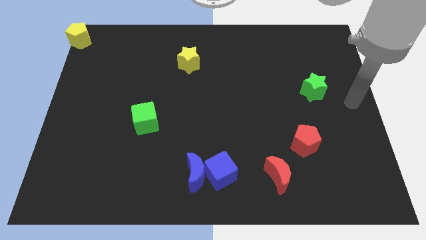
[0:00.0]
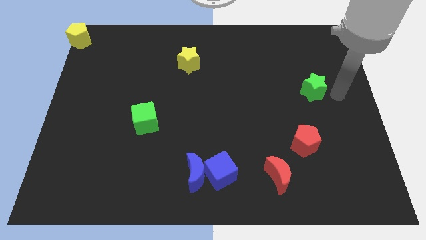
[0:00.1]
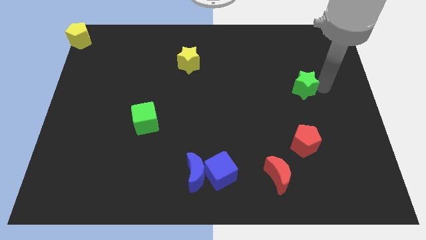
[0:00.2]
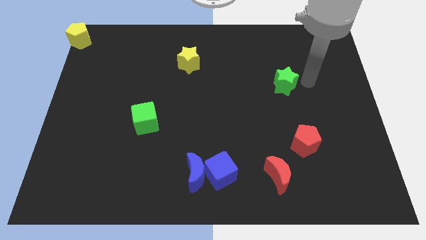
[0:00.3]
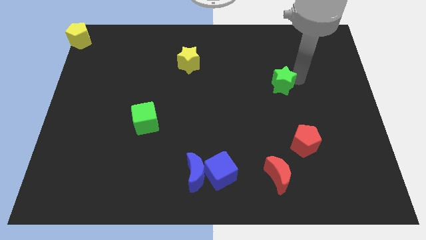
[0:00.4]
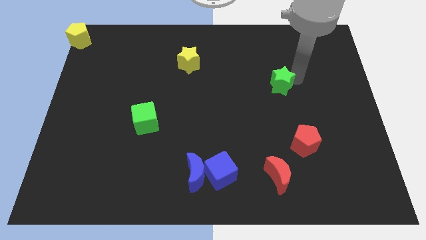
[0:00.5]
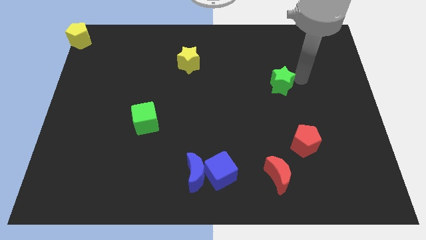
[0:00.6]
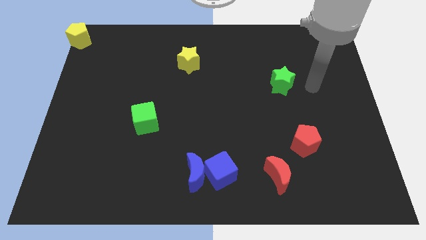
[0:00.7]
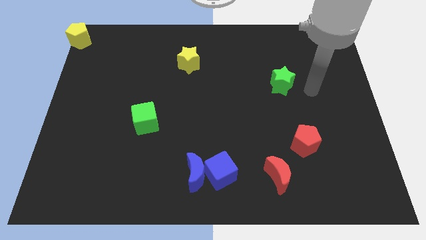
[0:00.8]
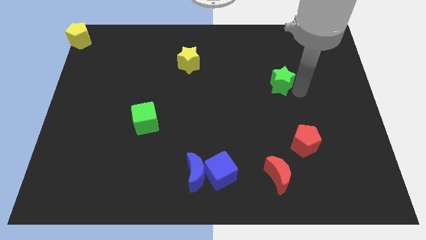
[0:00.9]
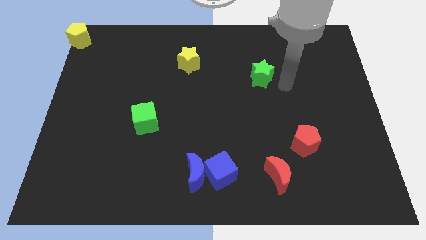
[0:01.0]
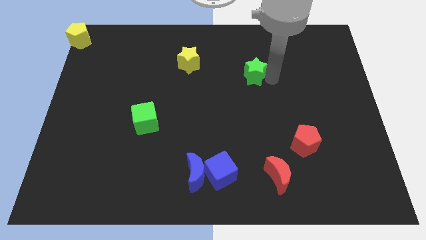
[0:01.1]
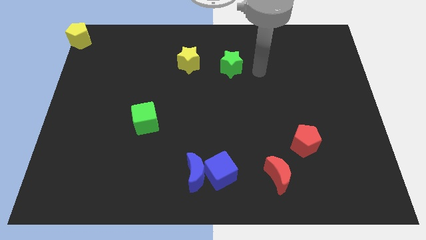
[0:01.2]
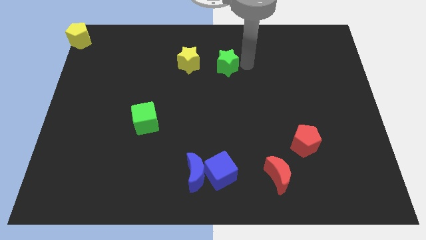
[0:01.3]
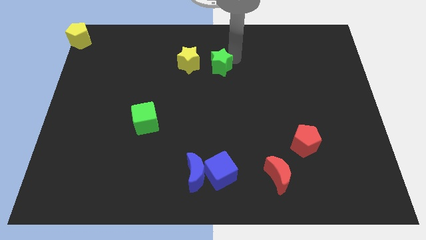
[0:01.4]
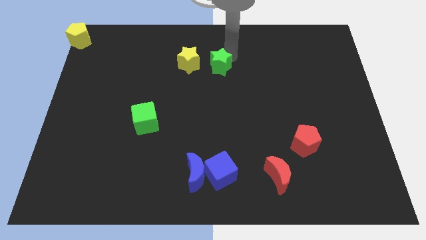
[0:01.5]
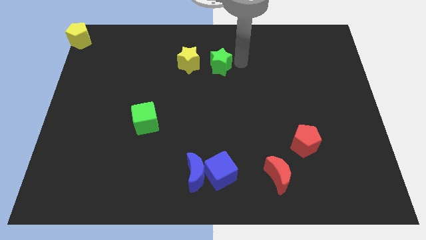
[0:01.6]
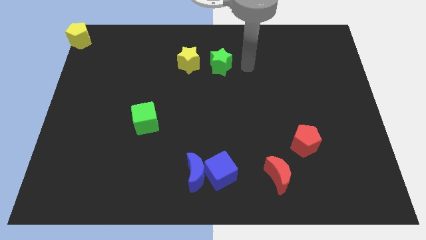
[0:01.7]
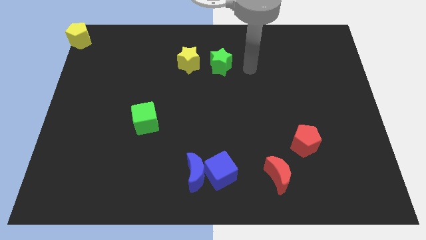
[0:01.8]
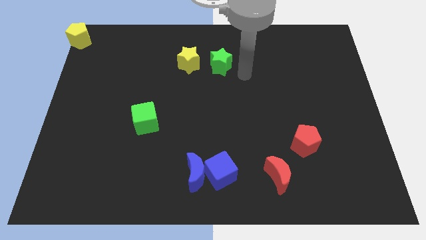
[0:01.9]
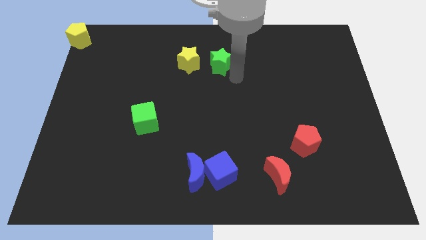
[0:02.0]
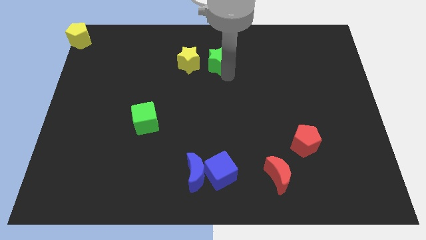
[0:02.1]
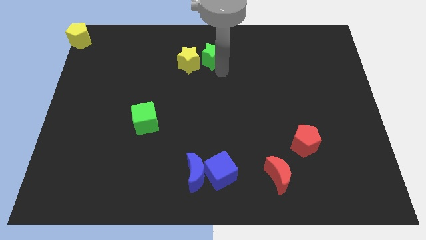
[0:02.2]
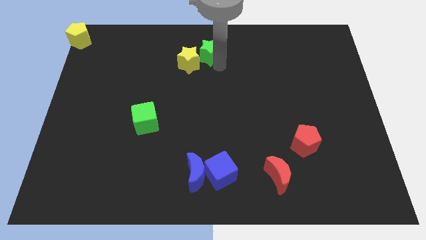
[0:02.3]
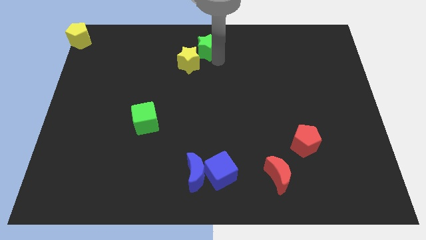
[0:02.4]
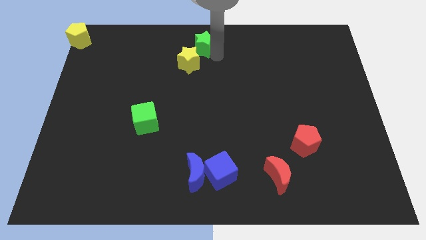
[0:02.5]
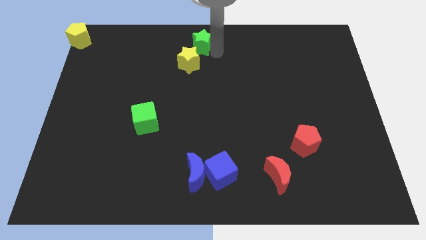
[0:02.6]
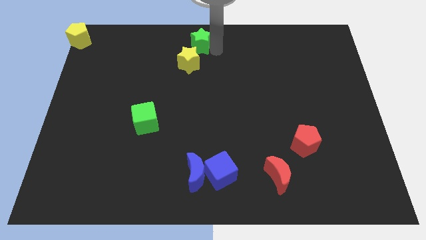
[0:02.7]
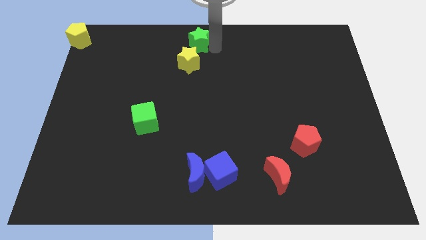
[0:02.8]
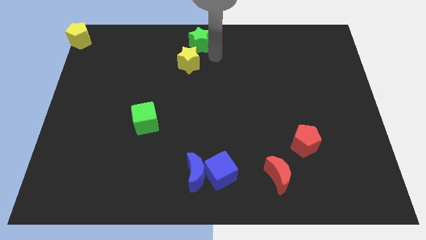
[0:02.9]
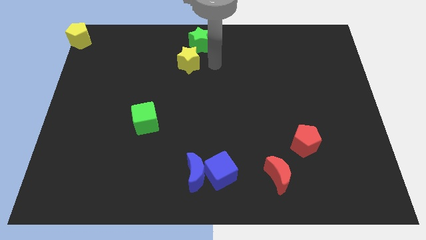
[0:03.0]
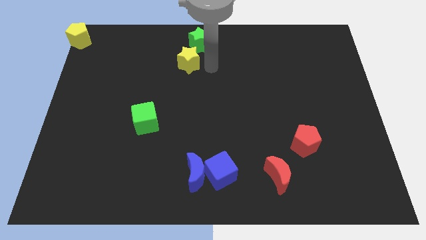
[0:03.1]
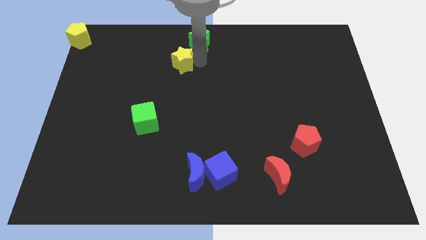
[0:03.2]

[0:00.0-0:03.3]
move the green star above the yellow star

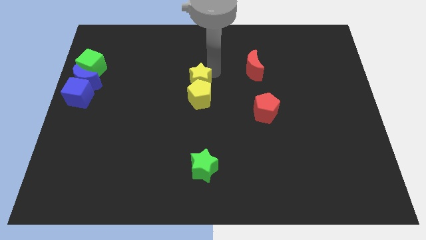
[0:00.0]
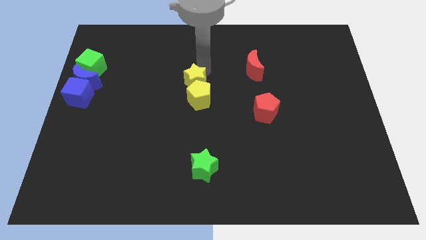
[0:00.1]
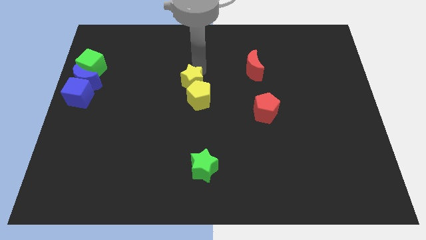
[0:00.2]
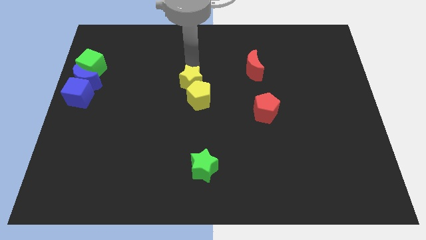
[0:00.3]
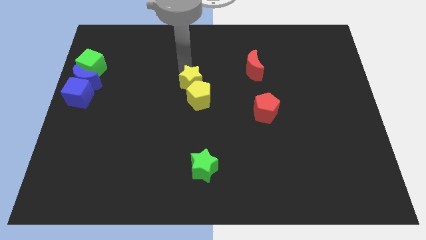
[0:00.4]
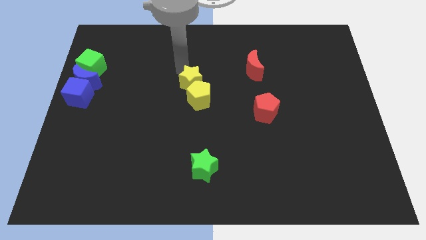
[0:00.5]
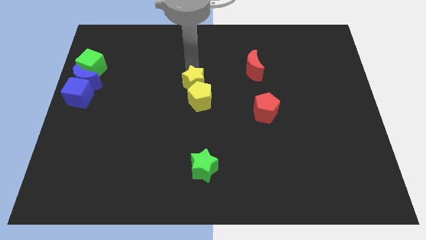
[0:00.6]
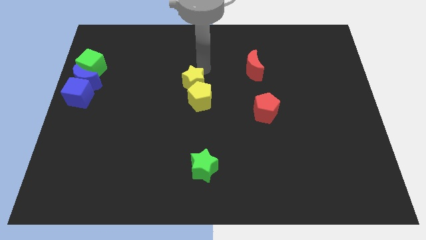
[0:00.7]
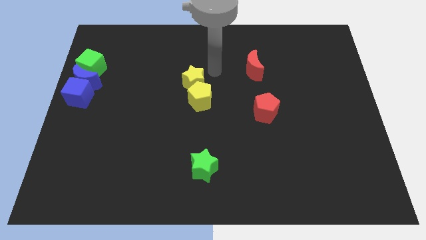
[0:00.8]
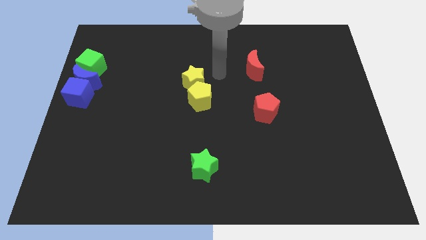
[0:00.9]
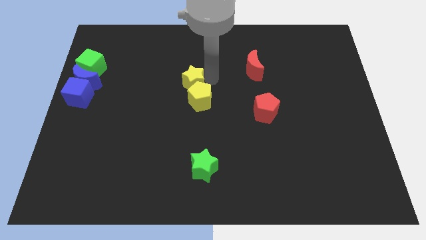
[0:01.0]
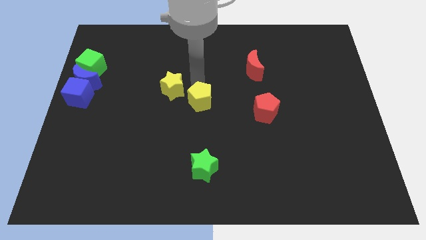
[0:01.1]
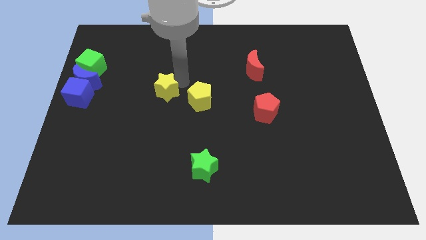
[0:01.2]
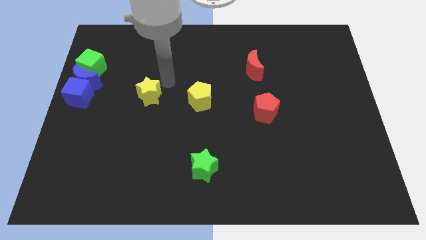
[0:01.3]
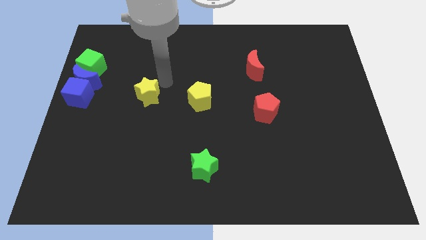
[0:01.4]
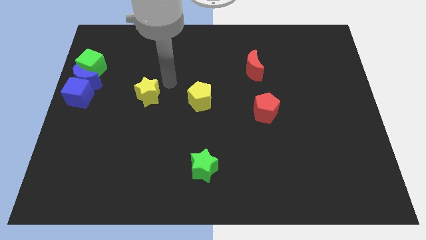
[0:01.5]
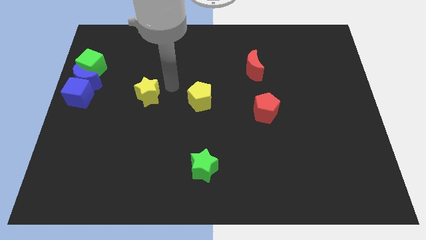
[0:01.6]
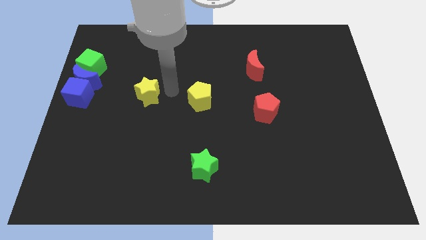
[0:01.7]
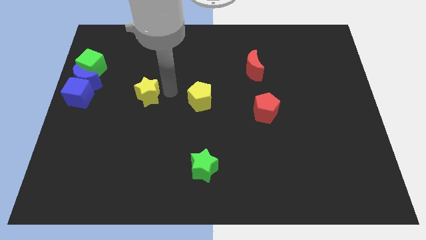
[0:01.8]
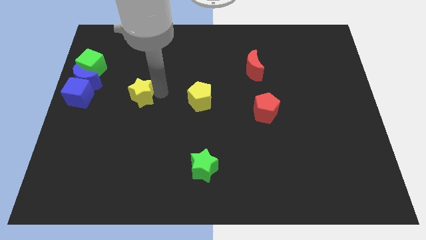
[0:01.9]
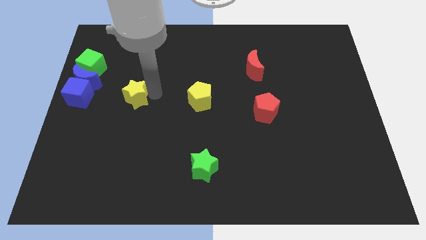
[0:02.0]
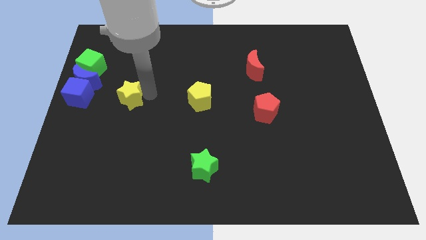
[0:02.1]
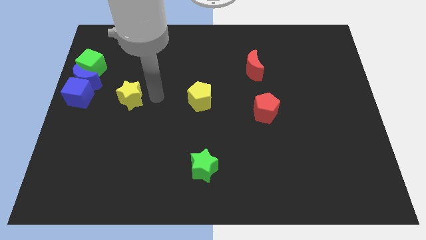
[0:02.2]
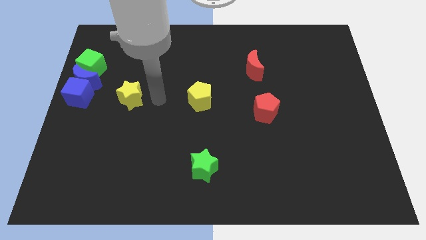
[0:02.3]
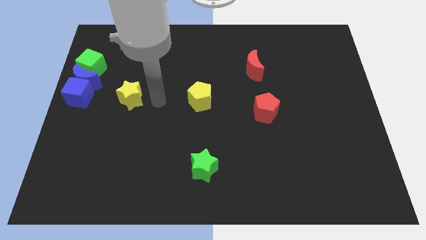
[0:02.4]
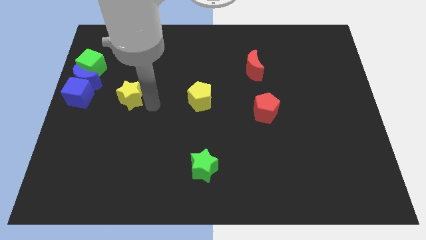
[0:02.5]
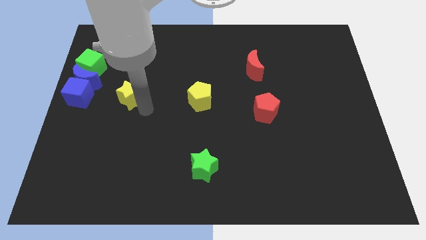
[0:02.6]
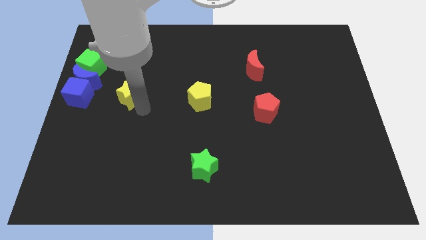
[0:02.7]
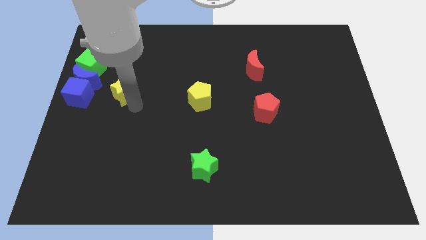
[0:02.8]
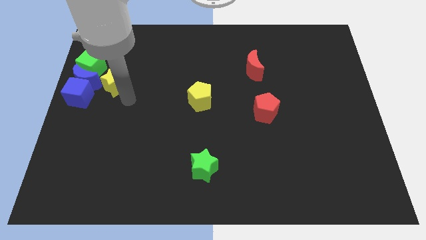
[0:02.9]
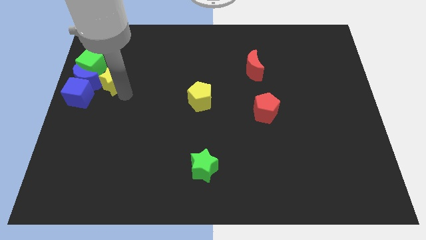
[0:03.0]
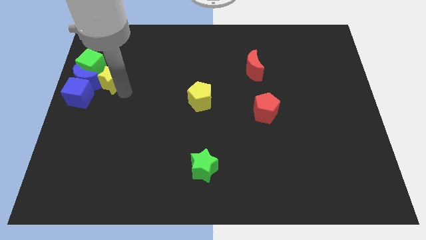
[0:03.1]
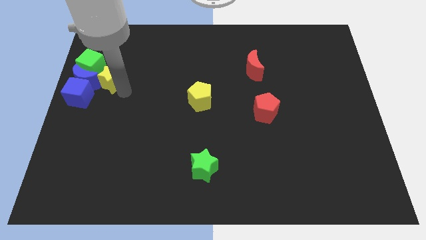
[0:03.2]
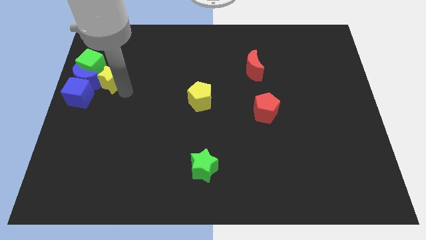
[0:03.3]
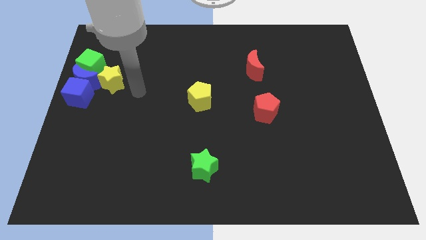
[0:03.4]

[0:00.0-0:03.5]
place the yellow star right to the blue moon

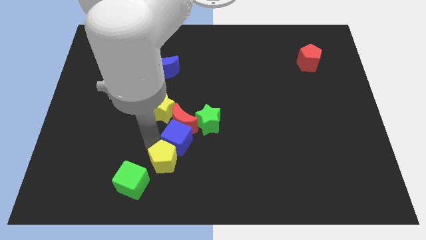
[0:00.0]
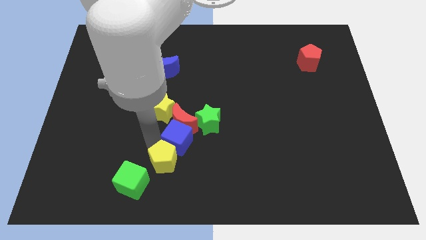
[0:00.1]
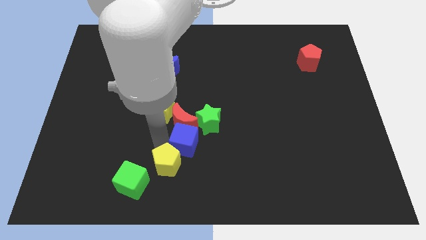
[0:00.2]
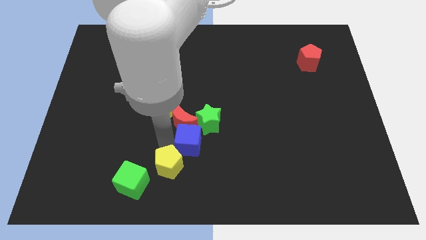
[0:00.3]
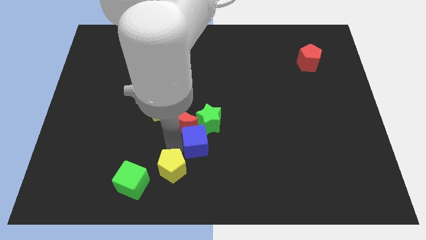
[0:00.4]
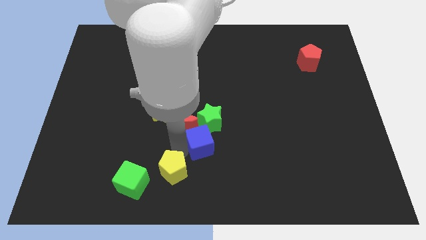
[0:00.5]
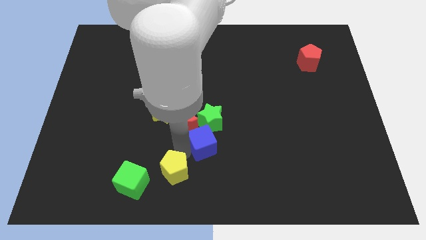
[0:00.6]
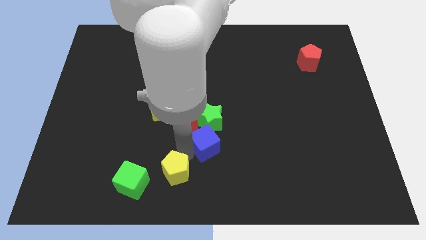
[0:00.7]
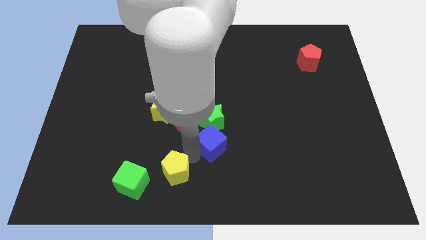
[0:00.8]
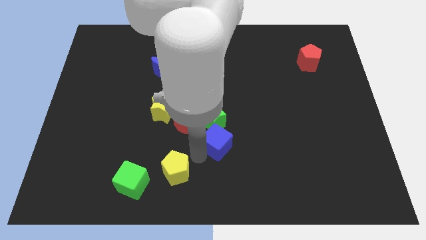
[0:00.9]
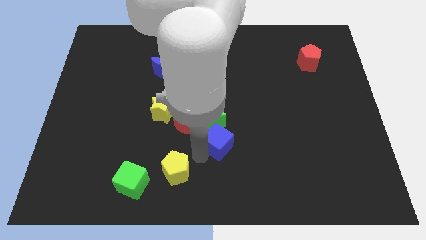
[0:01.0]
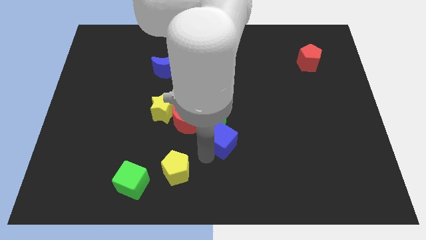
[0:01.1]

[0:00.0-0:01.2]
separate blue cube from the yellow pentagon

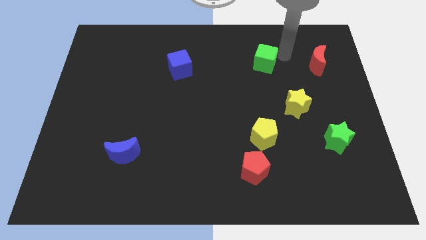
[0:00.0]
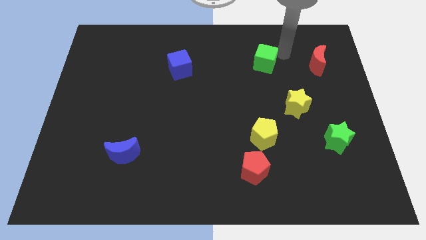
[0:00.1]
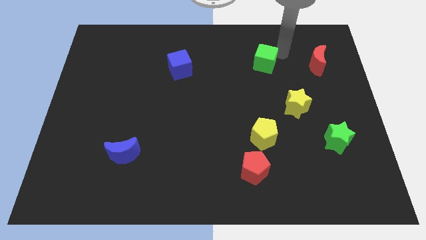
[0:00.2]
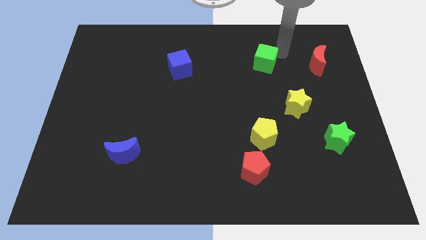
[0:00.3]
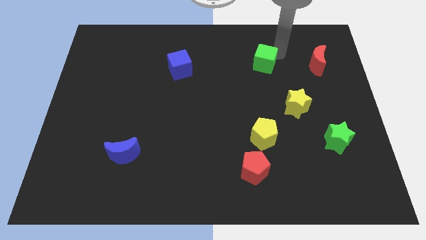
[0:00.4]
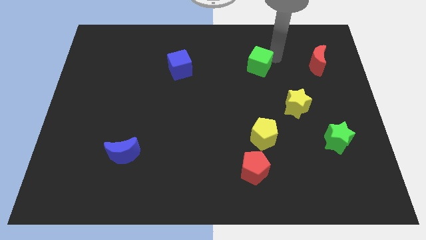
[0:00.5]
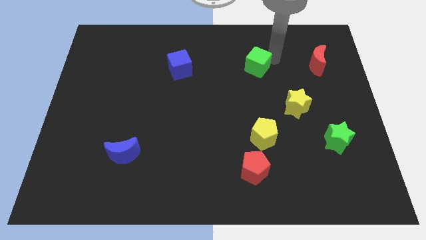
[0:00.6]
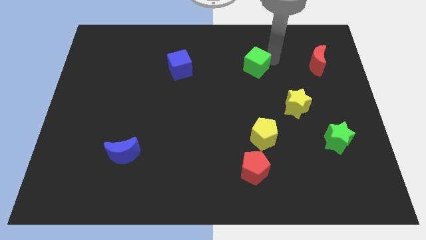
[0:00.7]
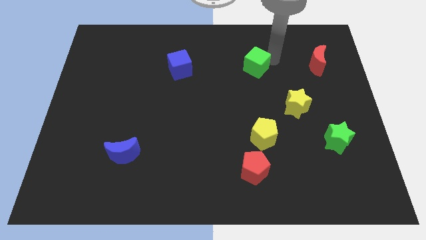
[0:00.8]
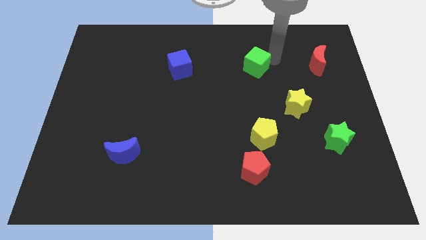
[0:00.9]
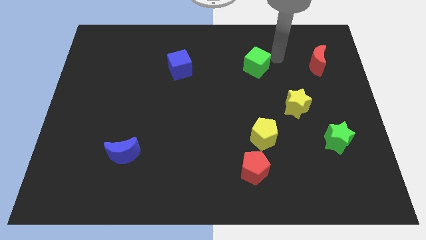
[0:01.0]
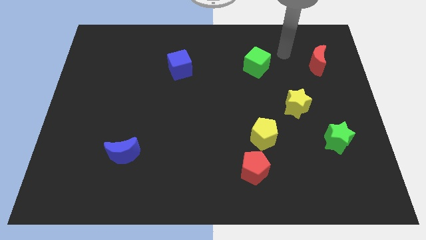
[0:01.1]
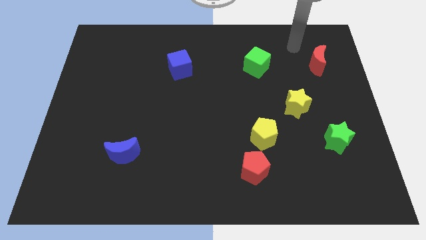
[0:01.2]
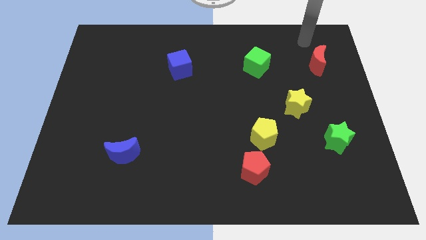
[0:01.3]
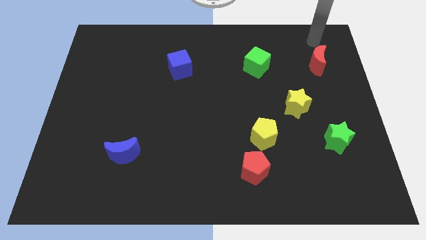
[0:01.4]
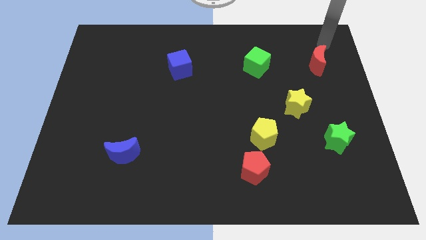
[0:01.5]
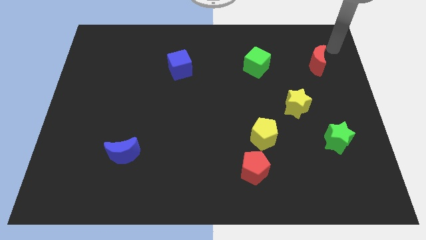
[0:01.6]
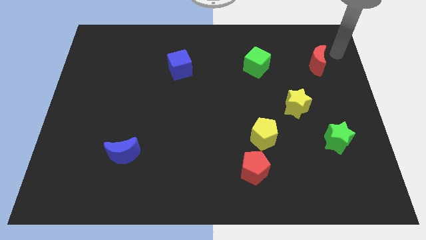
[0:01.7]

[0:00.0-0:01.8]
place your hand above red moon
